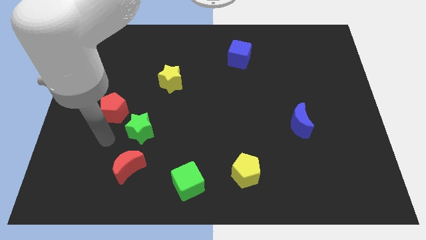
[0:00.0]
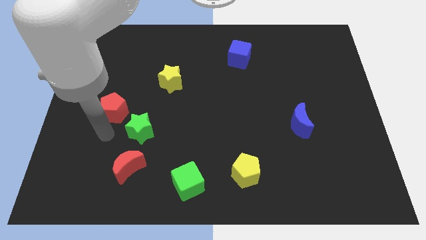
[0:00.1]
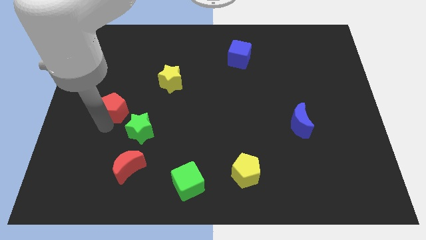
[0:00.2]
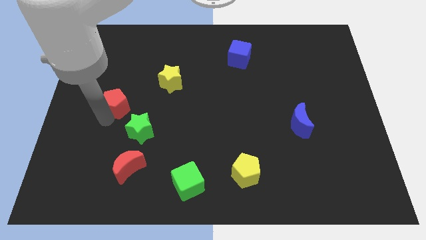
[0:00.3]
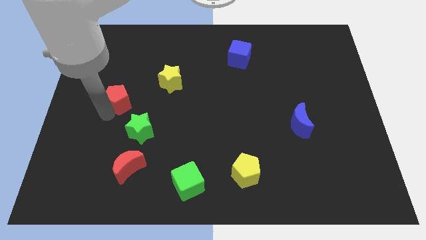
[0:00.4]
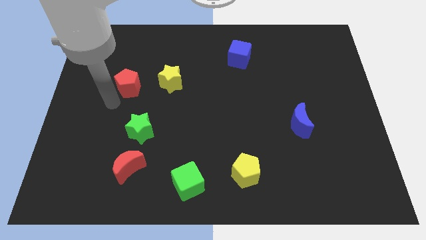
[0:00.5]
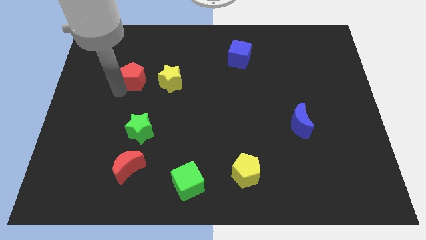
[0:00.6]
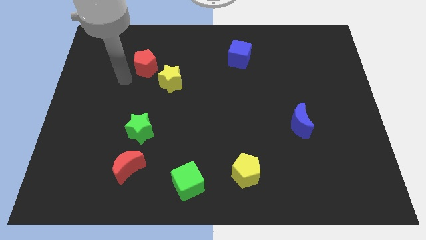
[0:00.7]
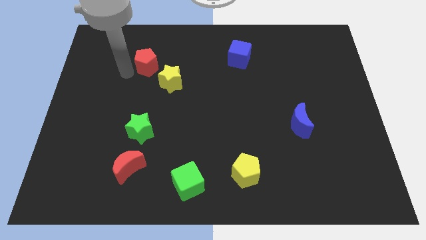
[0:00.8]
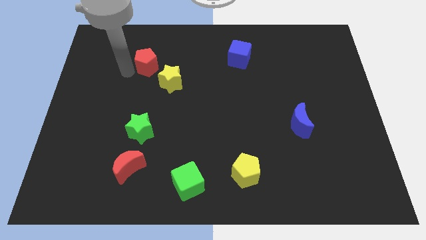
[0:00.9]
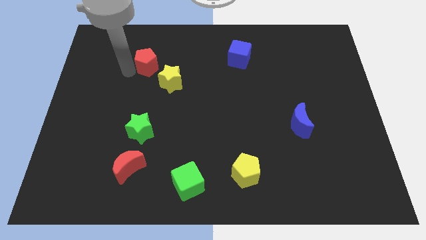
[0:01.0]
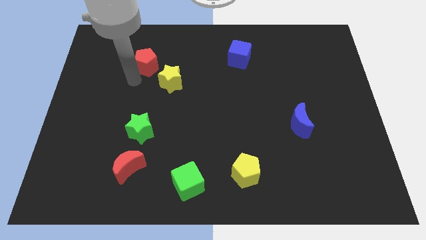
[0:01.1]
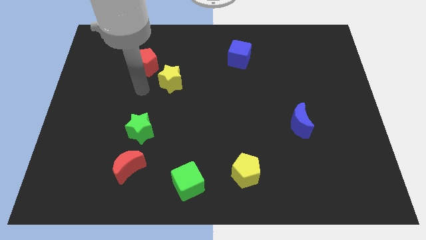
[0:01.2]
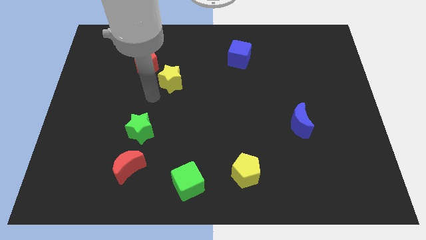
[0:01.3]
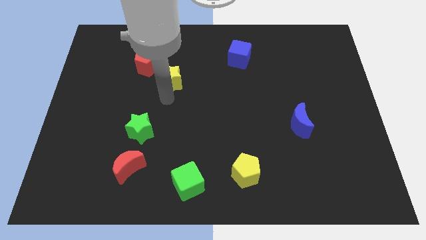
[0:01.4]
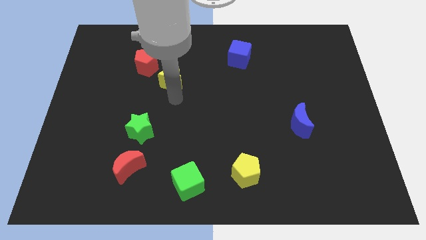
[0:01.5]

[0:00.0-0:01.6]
place the red pentagon diagonally to yellow star

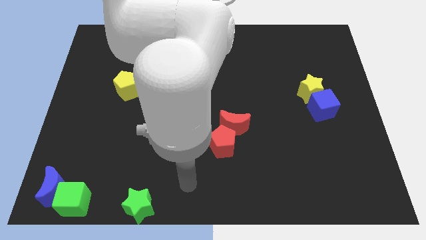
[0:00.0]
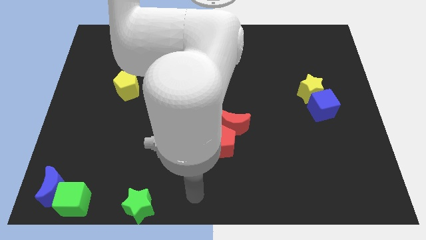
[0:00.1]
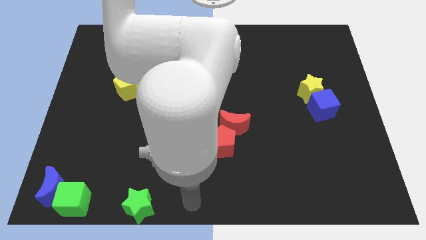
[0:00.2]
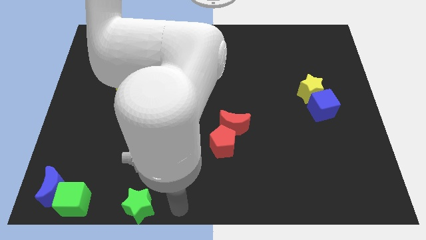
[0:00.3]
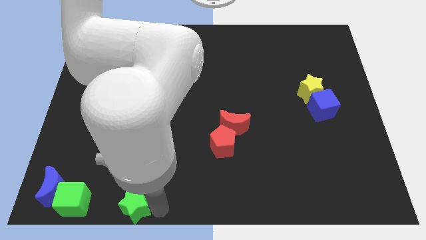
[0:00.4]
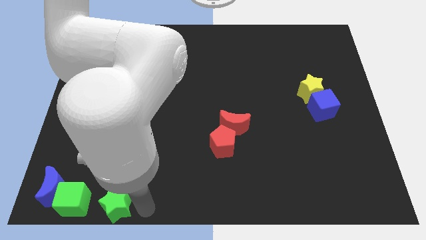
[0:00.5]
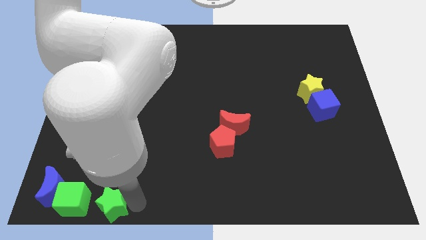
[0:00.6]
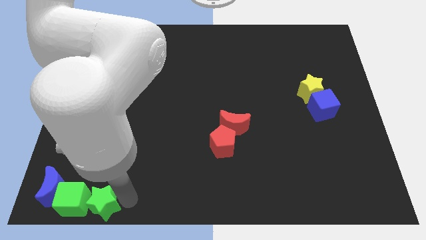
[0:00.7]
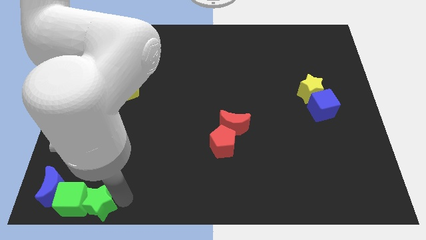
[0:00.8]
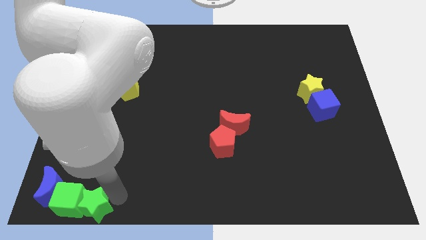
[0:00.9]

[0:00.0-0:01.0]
put the green star to the right side of green cube

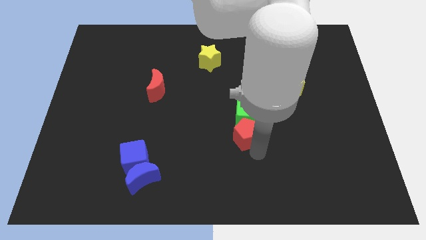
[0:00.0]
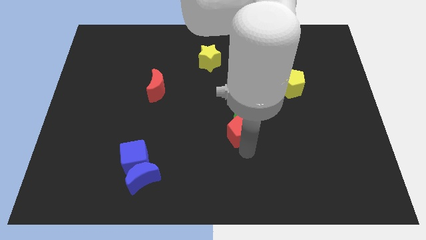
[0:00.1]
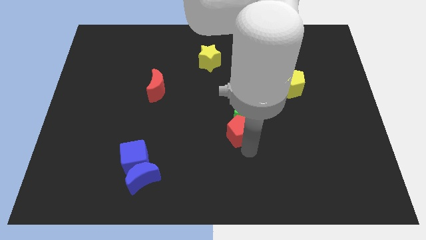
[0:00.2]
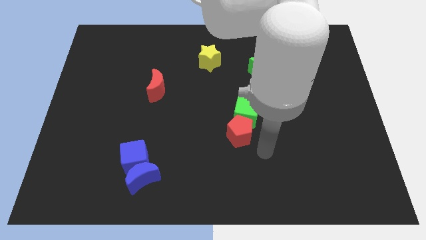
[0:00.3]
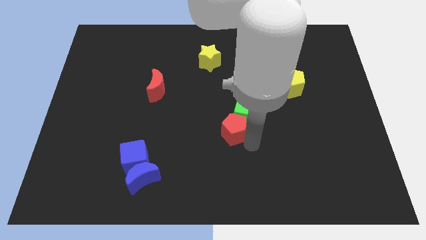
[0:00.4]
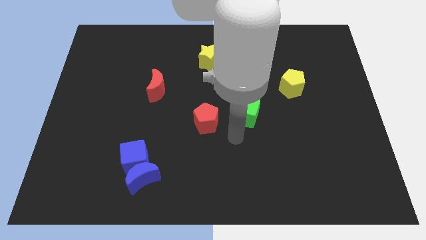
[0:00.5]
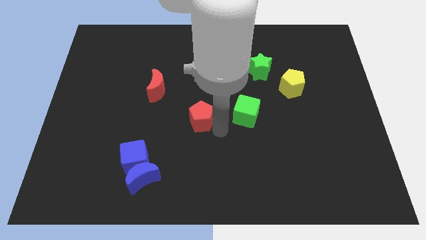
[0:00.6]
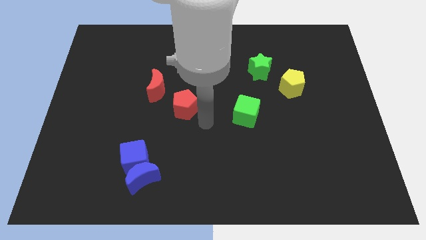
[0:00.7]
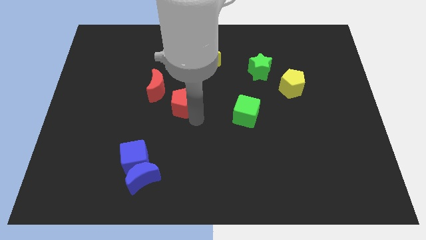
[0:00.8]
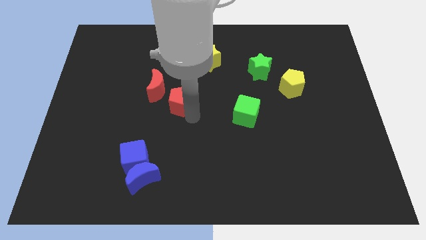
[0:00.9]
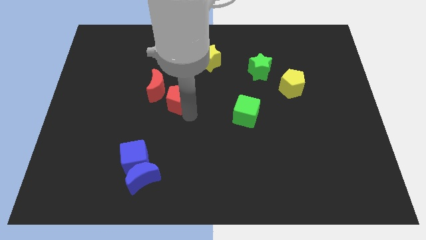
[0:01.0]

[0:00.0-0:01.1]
place the red pentagon in between the green cube and red moon

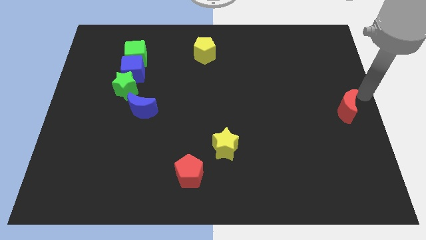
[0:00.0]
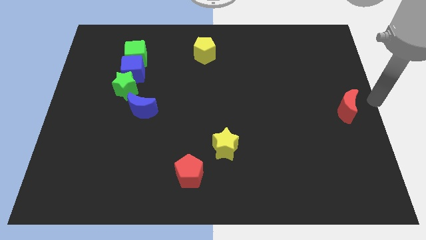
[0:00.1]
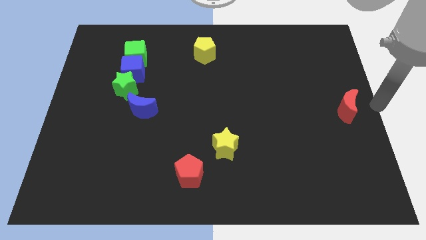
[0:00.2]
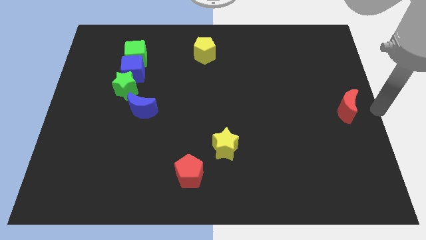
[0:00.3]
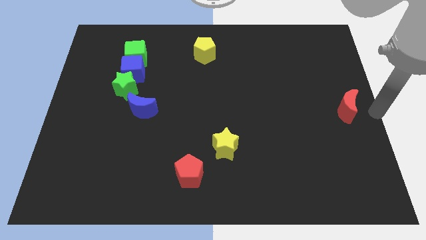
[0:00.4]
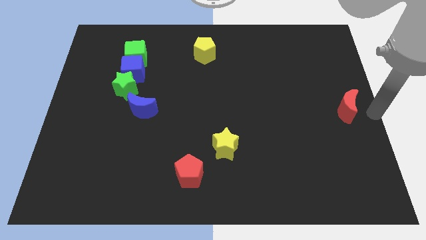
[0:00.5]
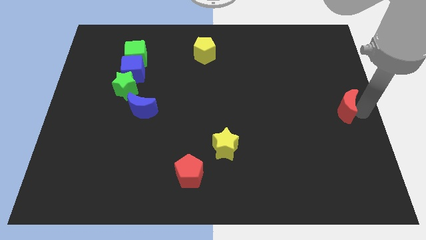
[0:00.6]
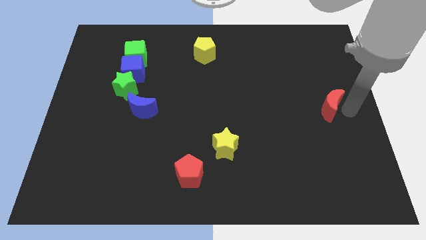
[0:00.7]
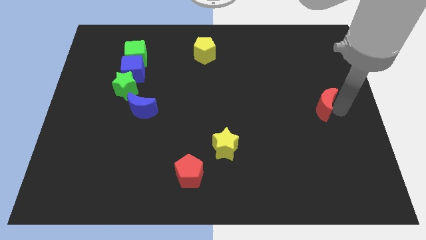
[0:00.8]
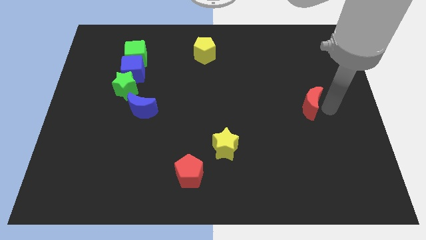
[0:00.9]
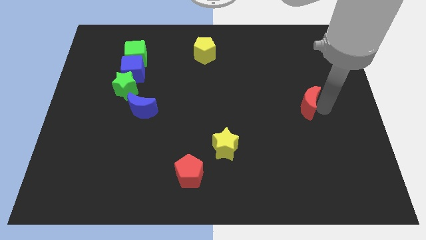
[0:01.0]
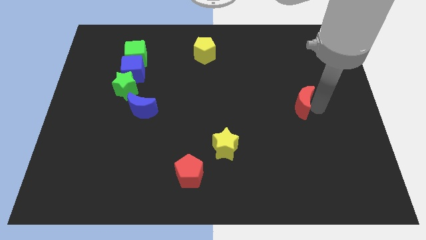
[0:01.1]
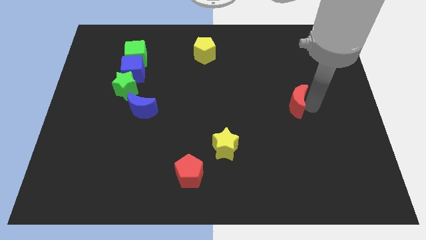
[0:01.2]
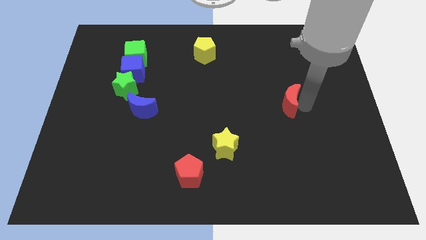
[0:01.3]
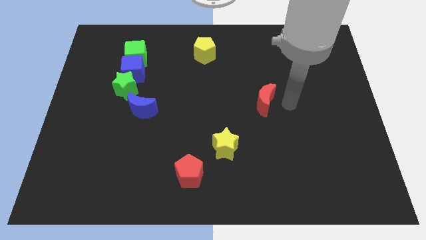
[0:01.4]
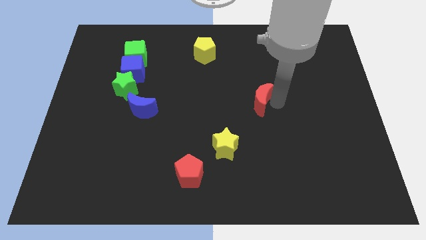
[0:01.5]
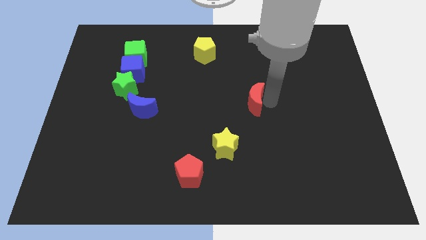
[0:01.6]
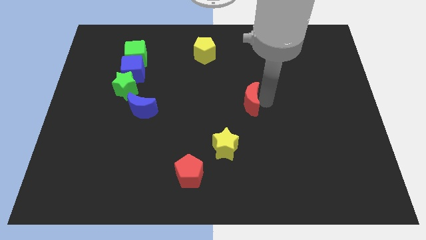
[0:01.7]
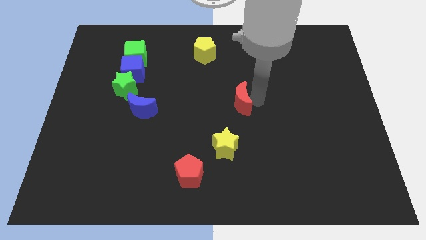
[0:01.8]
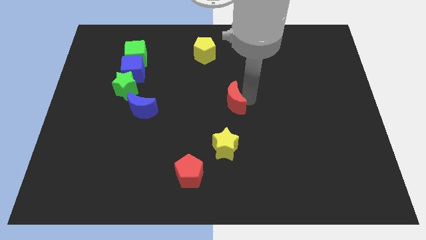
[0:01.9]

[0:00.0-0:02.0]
push the red moon to the center of the board

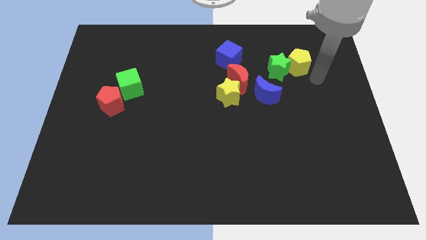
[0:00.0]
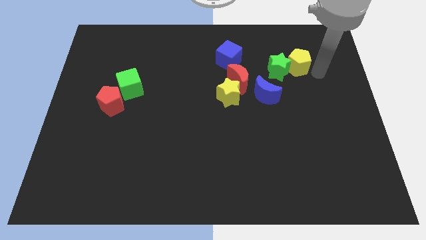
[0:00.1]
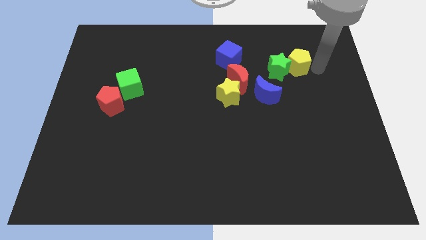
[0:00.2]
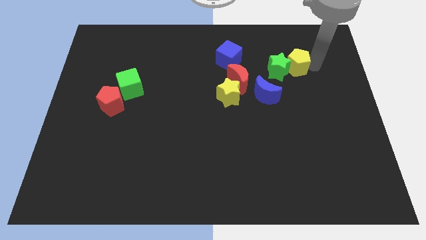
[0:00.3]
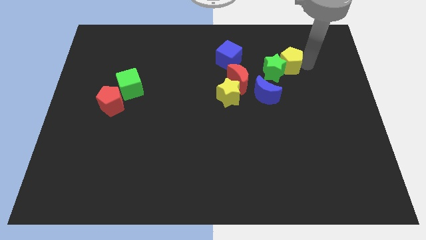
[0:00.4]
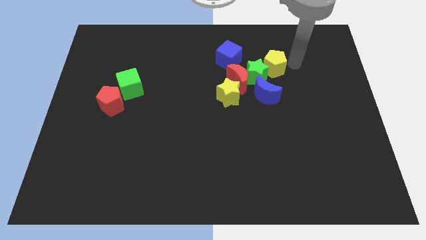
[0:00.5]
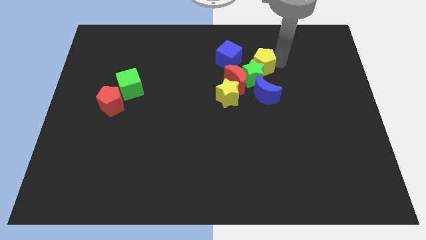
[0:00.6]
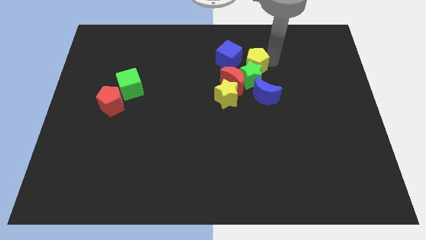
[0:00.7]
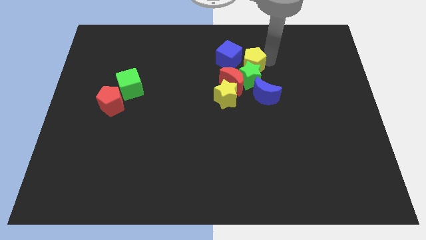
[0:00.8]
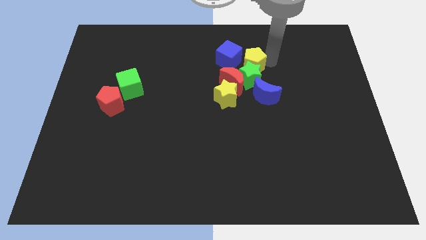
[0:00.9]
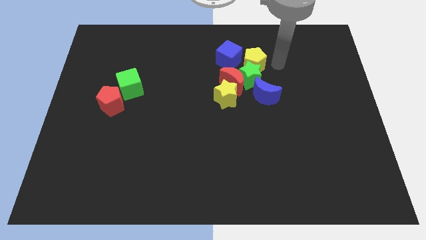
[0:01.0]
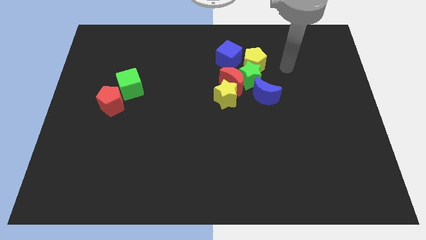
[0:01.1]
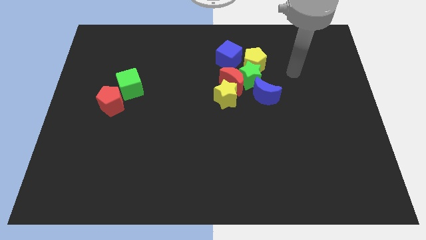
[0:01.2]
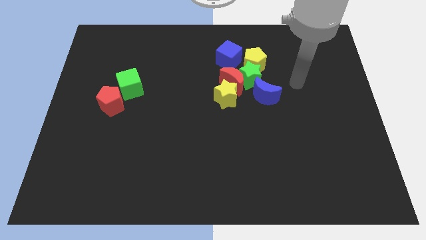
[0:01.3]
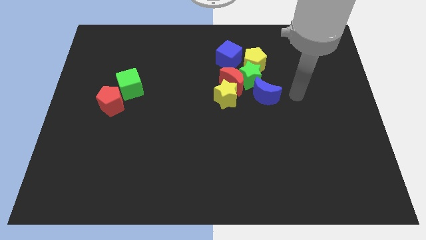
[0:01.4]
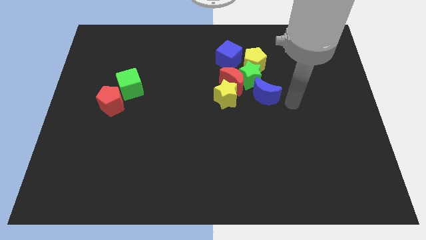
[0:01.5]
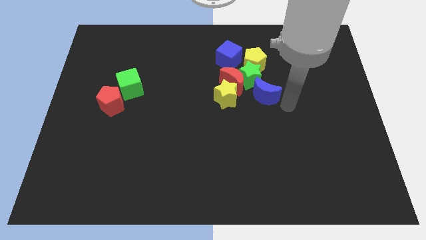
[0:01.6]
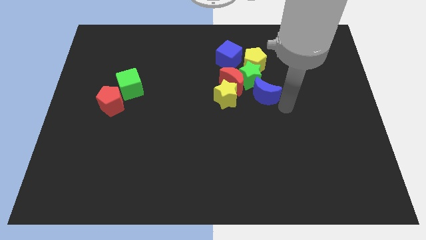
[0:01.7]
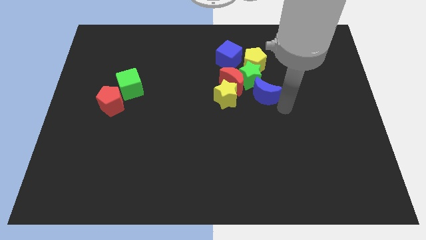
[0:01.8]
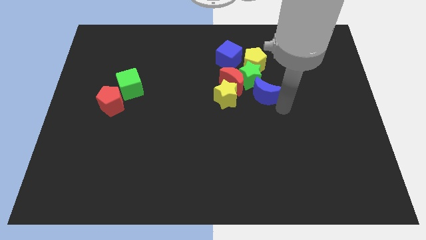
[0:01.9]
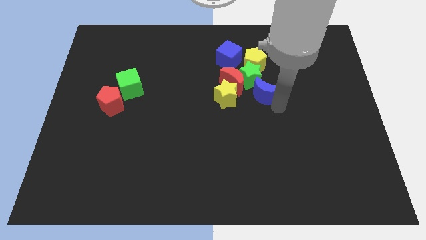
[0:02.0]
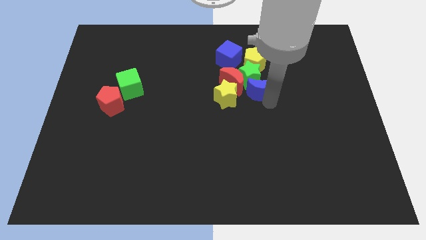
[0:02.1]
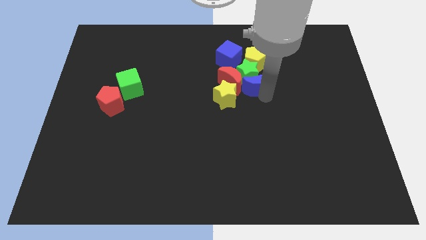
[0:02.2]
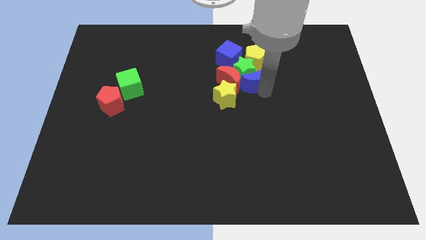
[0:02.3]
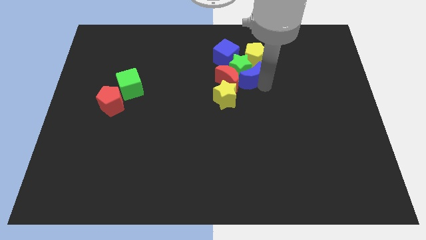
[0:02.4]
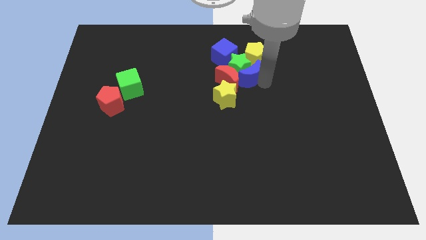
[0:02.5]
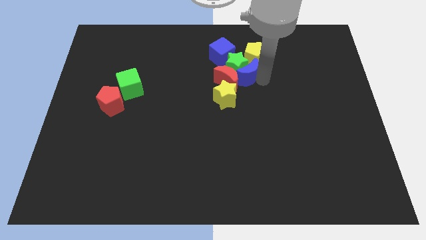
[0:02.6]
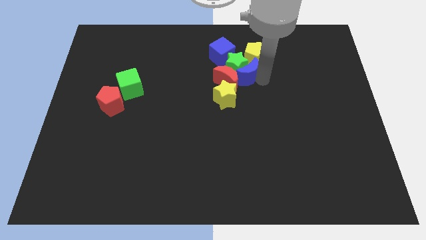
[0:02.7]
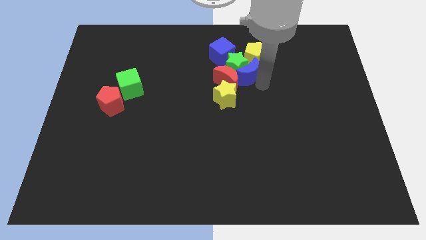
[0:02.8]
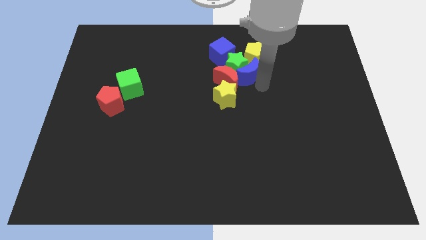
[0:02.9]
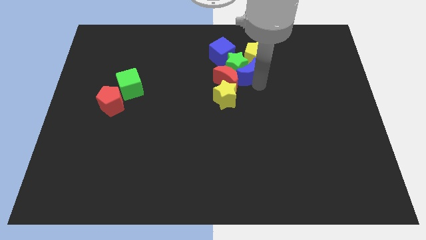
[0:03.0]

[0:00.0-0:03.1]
push the blue moon yellow pentagon and green star into blue cube
